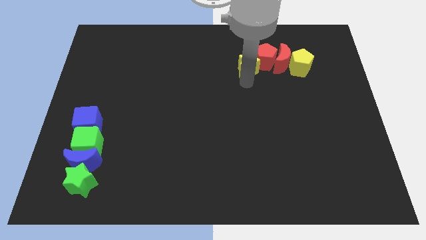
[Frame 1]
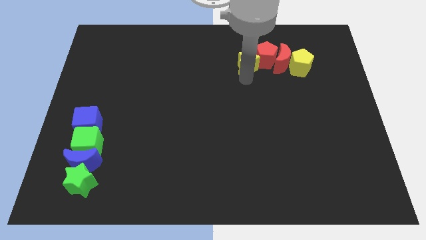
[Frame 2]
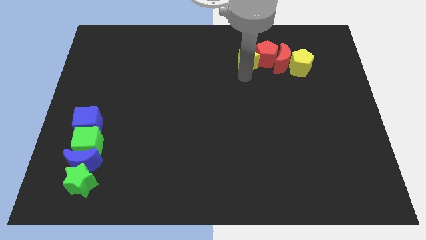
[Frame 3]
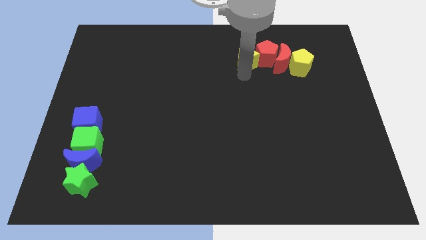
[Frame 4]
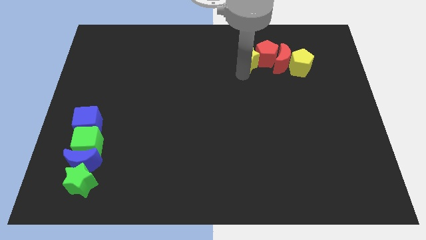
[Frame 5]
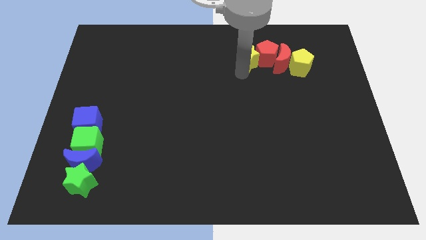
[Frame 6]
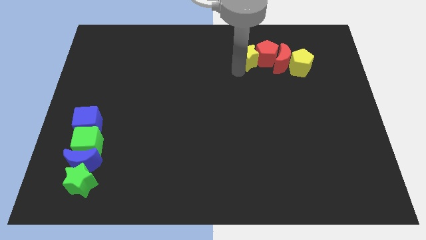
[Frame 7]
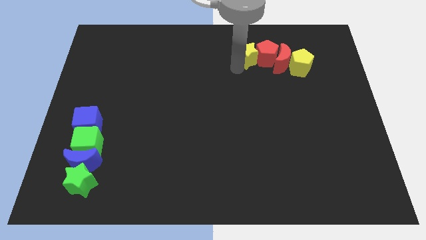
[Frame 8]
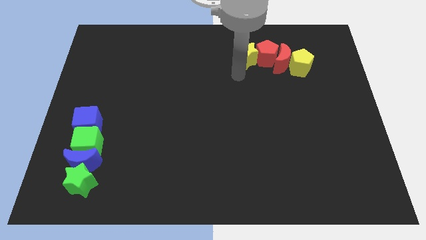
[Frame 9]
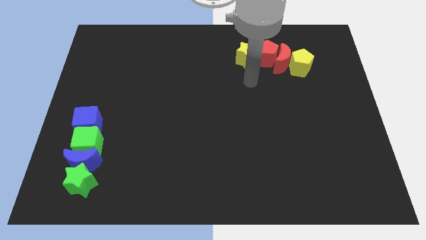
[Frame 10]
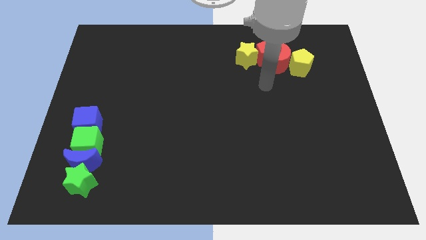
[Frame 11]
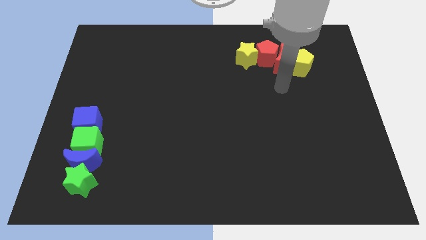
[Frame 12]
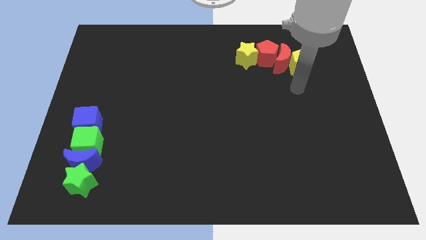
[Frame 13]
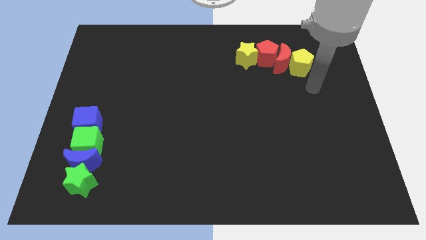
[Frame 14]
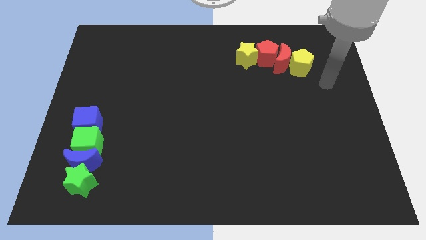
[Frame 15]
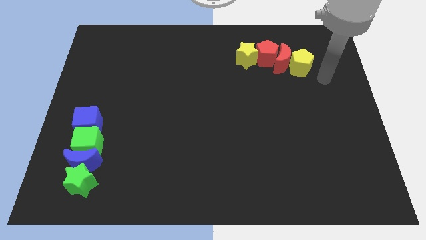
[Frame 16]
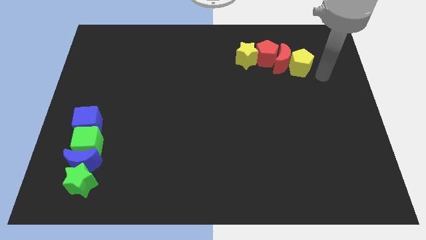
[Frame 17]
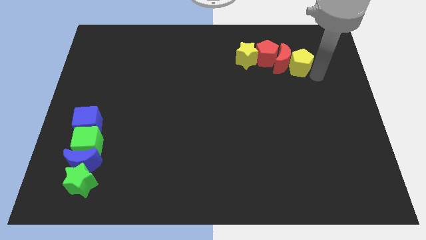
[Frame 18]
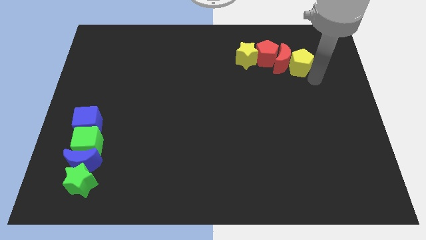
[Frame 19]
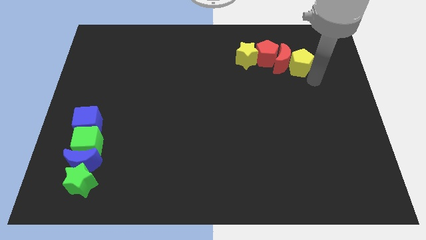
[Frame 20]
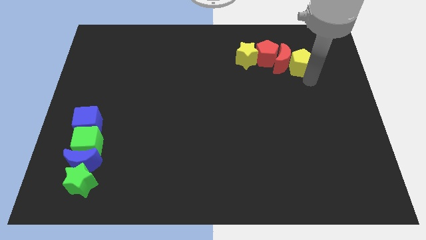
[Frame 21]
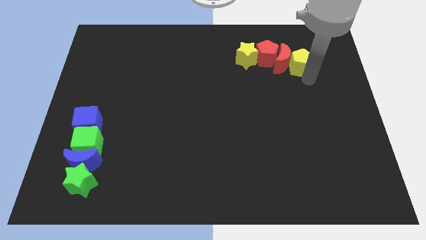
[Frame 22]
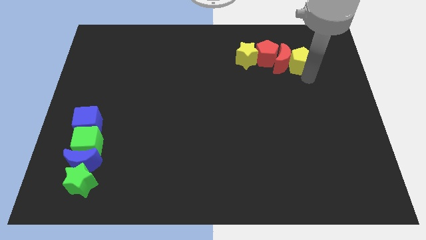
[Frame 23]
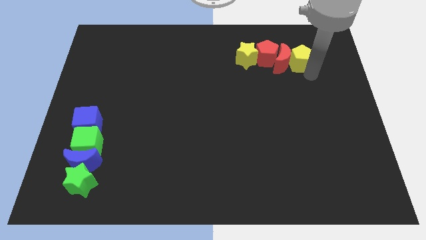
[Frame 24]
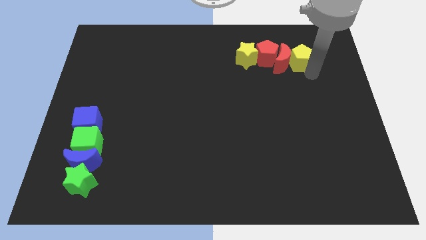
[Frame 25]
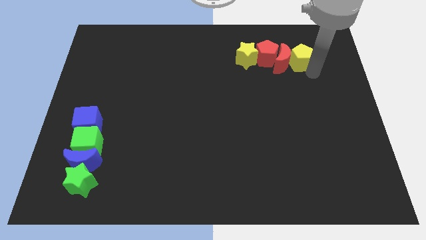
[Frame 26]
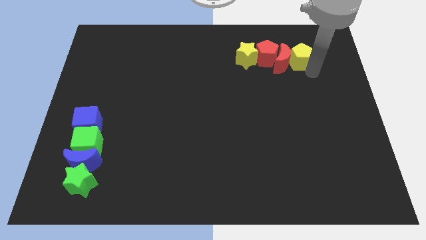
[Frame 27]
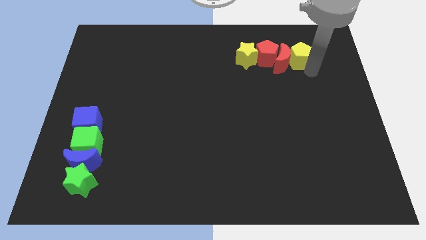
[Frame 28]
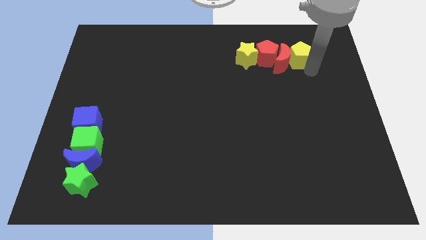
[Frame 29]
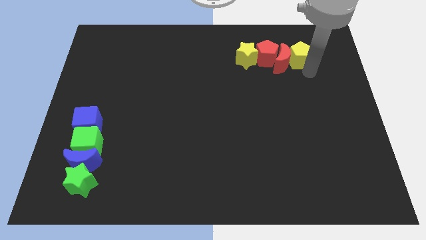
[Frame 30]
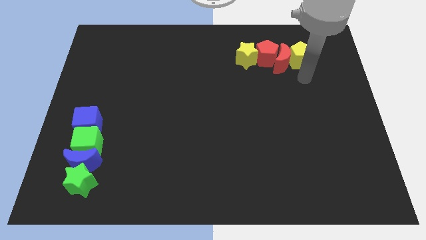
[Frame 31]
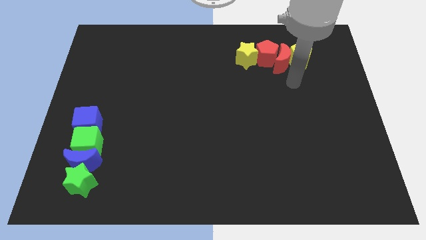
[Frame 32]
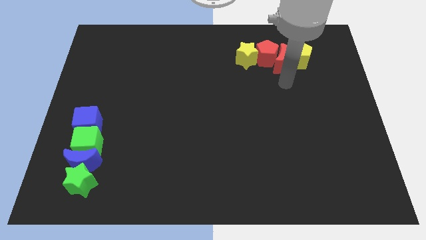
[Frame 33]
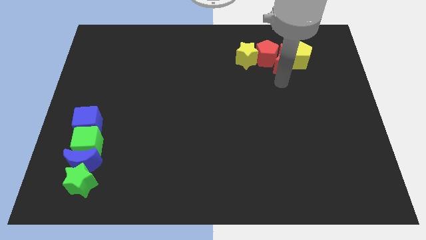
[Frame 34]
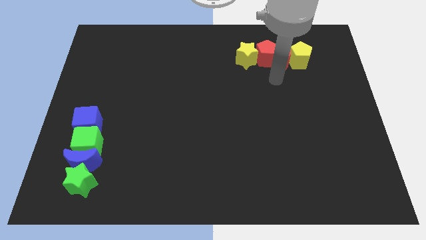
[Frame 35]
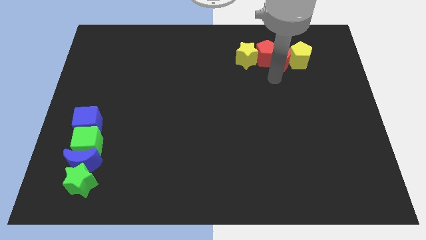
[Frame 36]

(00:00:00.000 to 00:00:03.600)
slightly move the yellow pentagon up

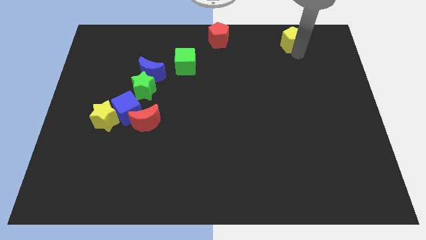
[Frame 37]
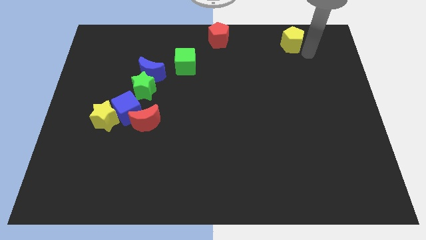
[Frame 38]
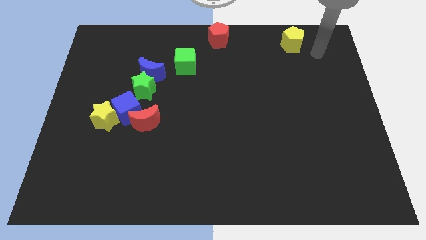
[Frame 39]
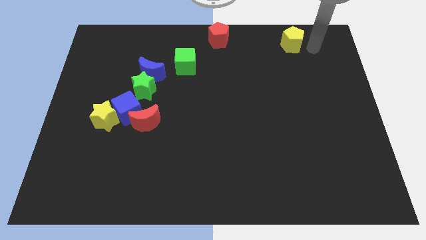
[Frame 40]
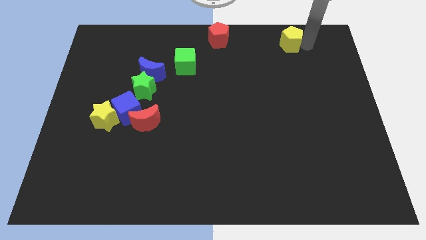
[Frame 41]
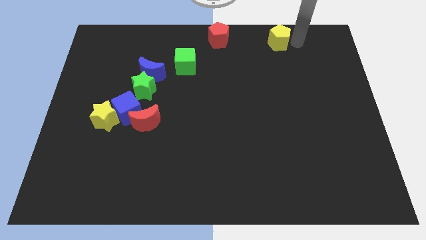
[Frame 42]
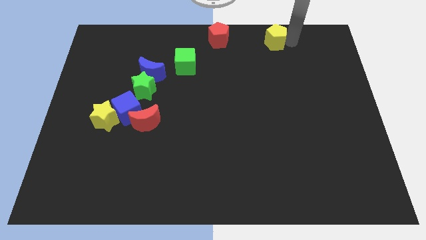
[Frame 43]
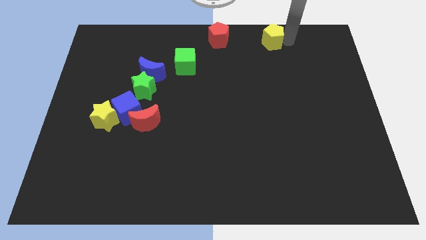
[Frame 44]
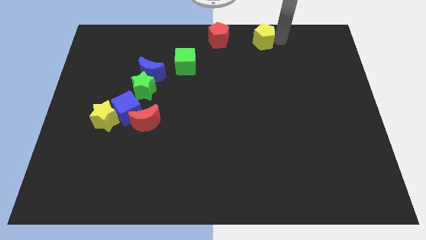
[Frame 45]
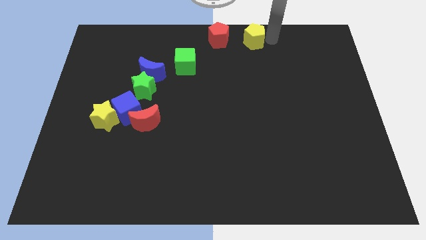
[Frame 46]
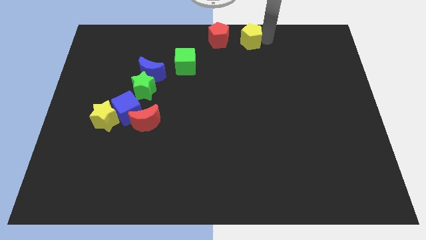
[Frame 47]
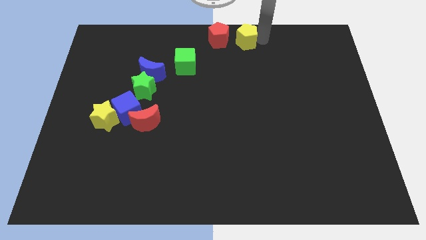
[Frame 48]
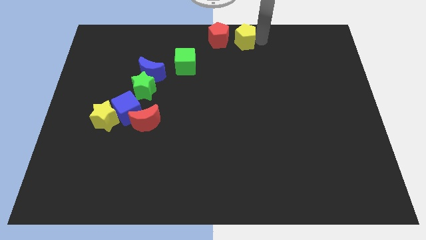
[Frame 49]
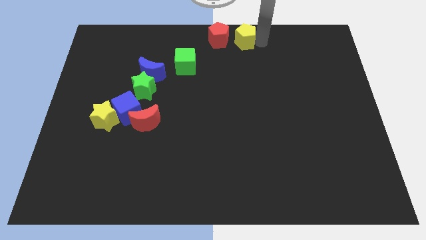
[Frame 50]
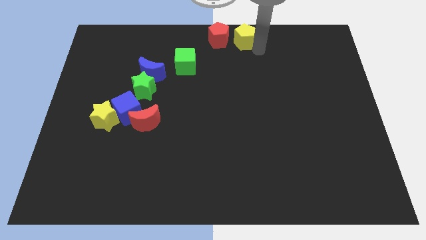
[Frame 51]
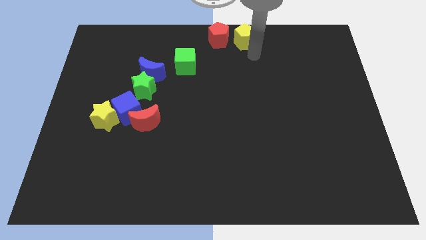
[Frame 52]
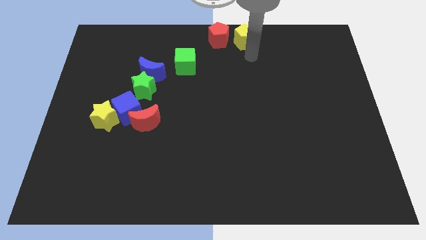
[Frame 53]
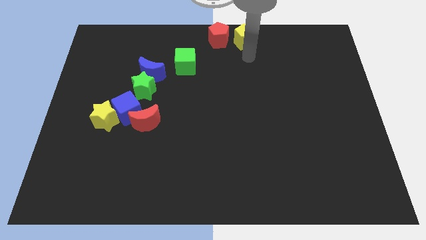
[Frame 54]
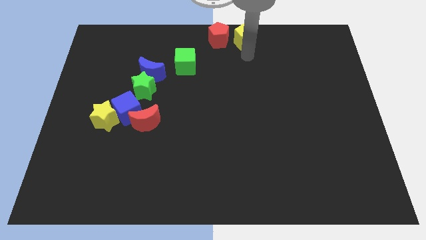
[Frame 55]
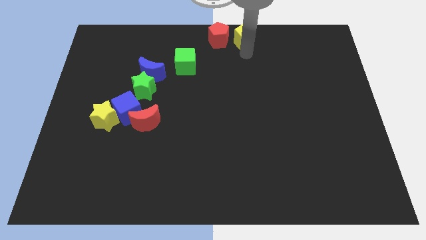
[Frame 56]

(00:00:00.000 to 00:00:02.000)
move the yellow pentagon close to the red pentagon

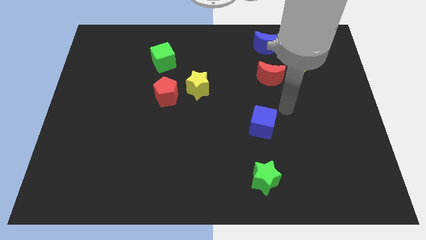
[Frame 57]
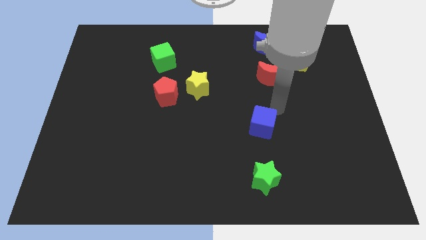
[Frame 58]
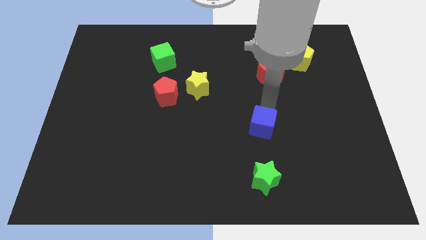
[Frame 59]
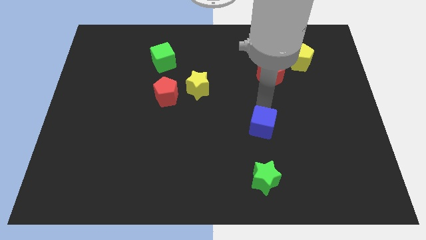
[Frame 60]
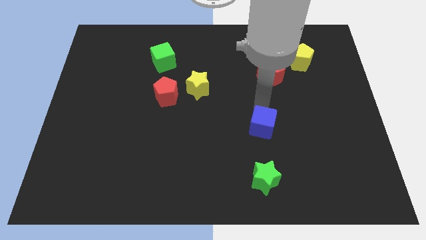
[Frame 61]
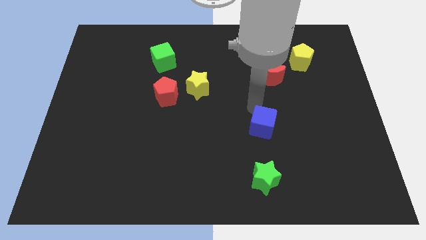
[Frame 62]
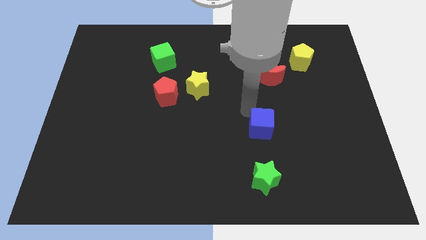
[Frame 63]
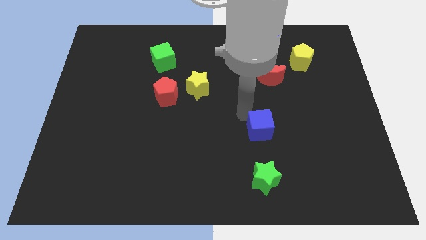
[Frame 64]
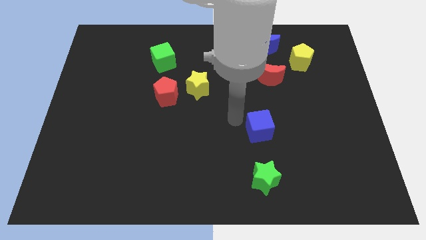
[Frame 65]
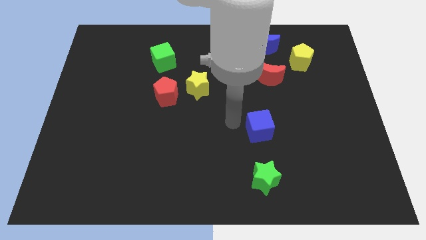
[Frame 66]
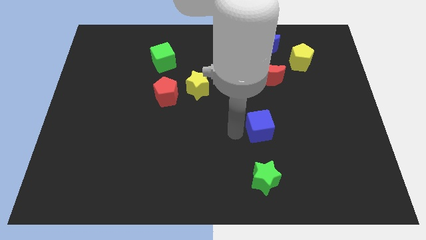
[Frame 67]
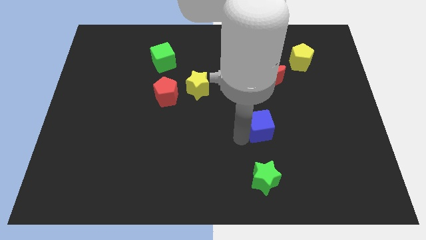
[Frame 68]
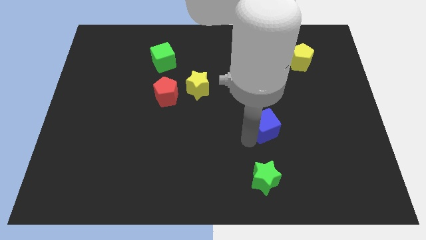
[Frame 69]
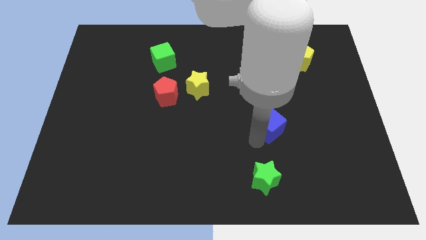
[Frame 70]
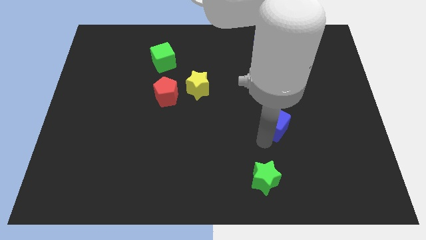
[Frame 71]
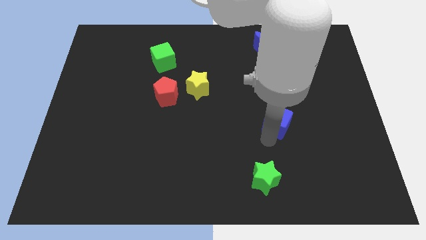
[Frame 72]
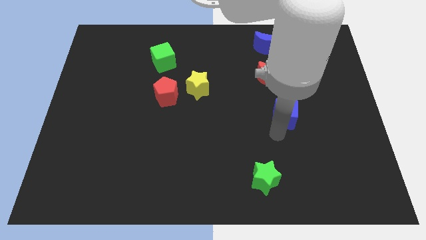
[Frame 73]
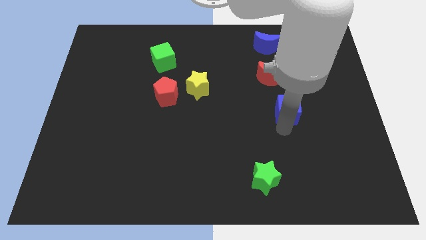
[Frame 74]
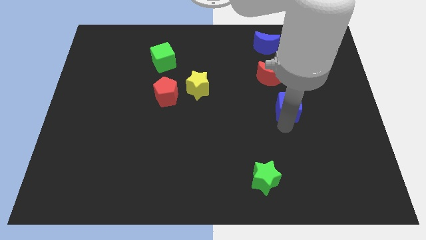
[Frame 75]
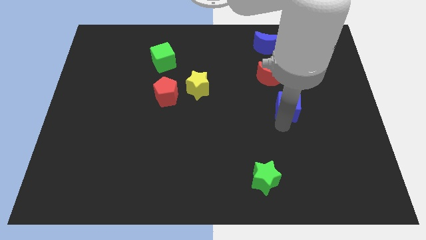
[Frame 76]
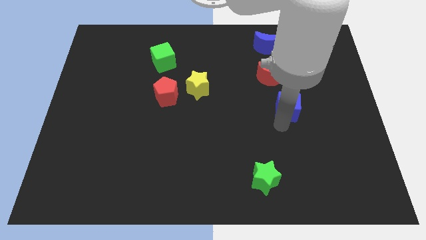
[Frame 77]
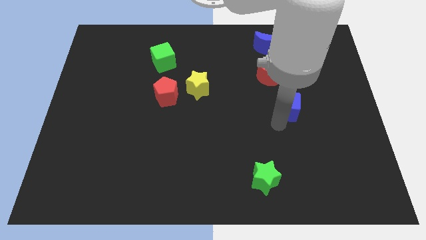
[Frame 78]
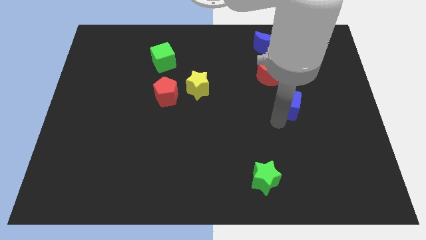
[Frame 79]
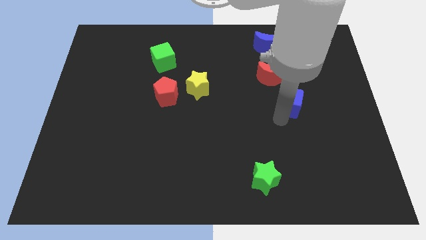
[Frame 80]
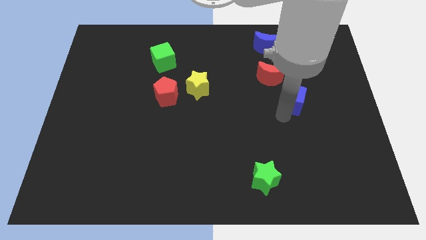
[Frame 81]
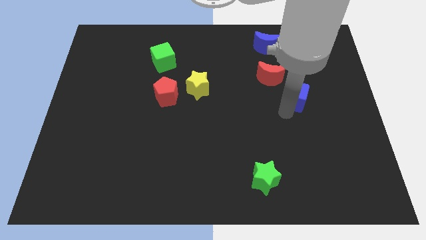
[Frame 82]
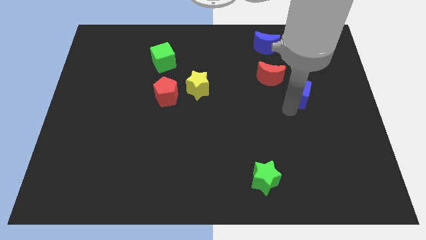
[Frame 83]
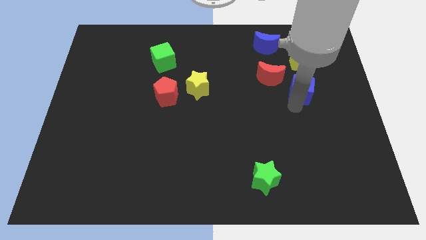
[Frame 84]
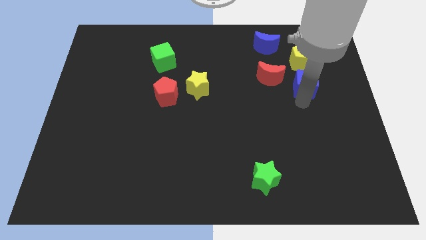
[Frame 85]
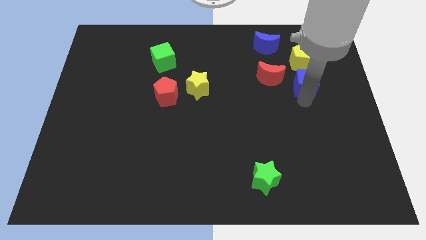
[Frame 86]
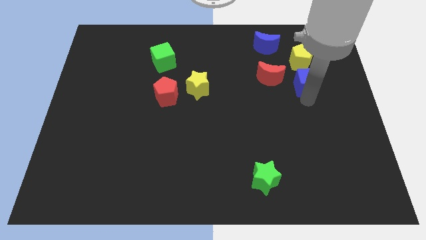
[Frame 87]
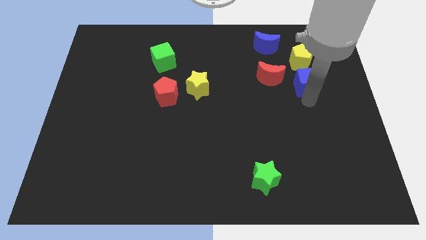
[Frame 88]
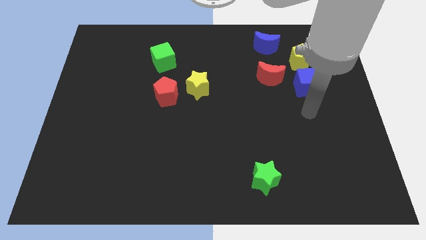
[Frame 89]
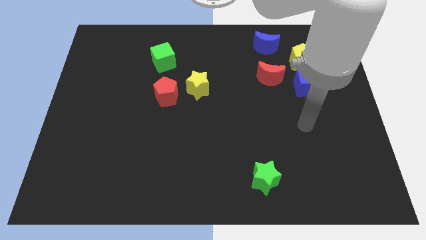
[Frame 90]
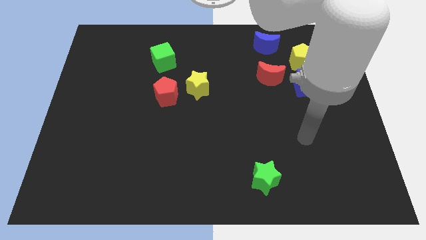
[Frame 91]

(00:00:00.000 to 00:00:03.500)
put the blue cube underneath the yellow pentagon
